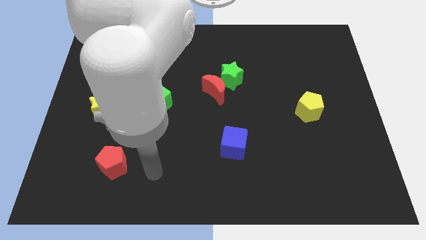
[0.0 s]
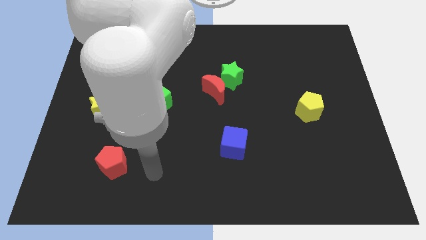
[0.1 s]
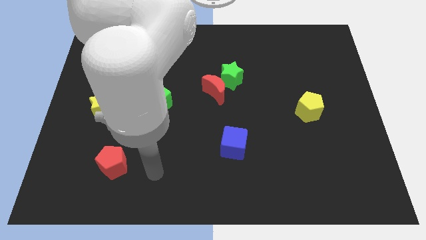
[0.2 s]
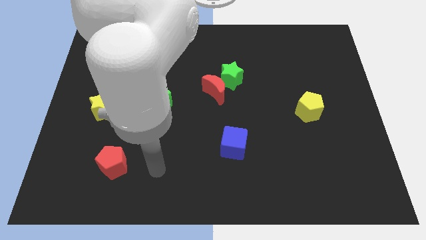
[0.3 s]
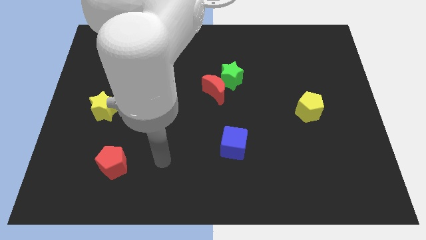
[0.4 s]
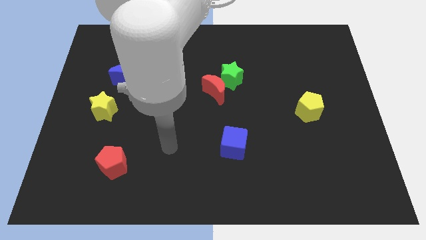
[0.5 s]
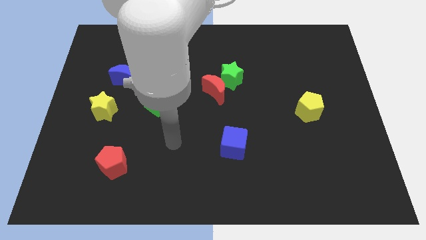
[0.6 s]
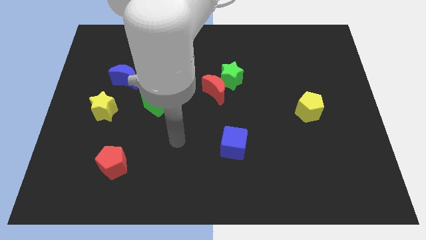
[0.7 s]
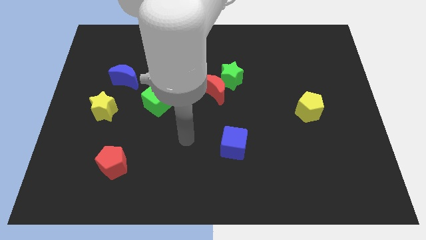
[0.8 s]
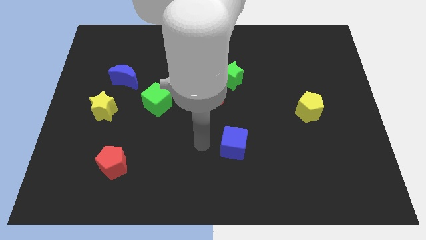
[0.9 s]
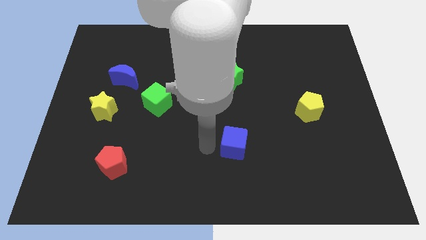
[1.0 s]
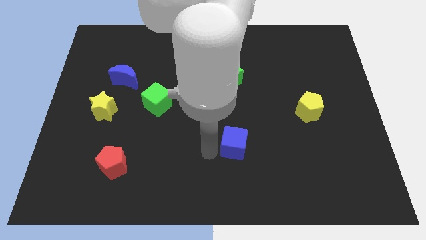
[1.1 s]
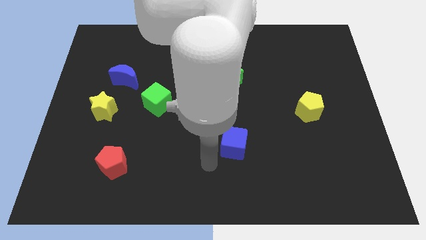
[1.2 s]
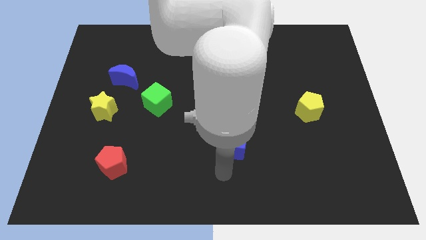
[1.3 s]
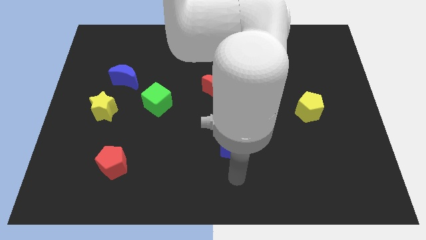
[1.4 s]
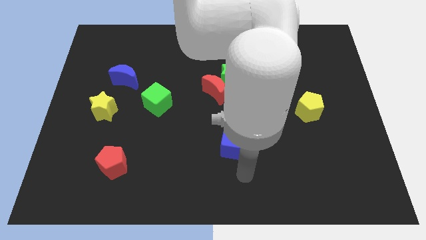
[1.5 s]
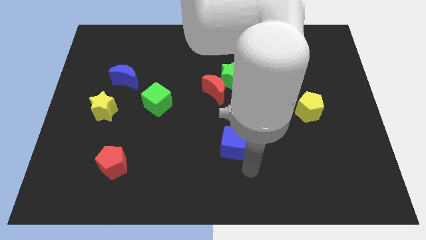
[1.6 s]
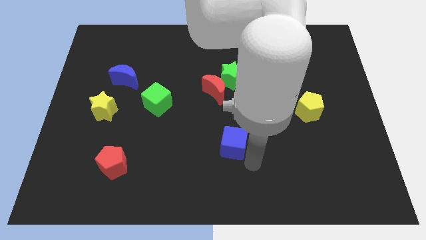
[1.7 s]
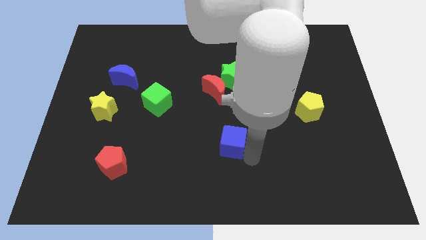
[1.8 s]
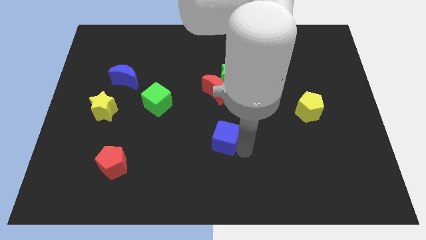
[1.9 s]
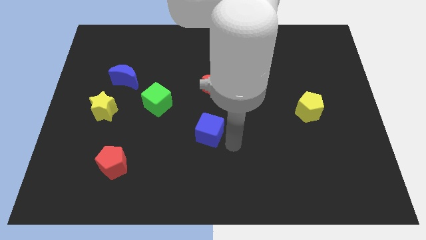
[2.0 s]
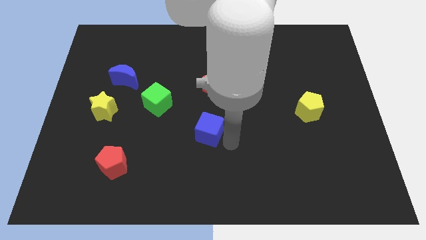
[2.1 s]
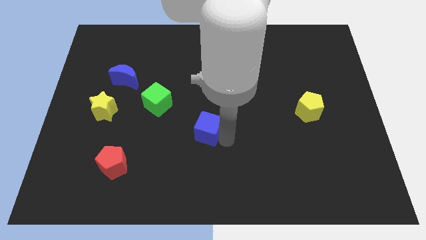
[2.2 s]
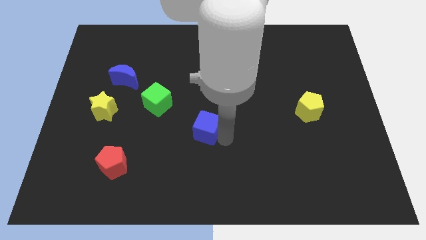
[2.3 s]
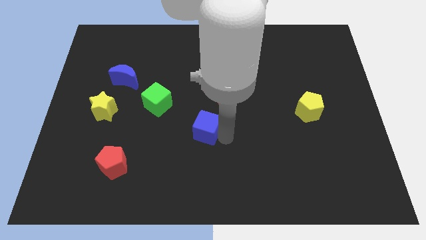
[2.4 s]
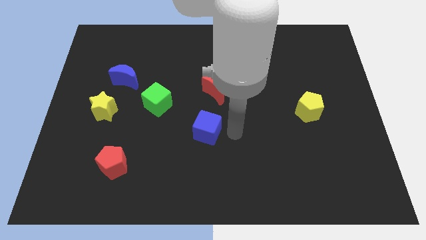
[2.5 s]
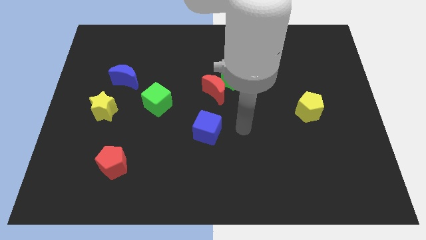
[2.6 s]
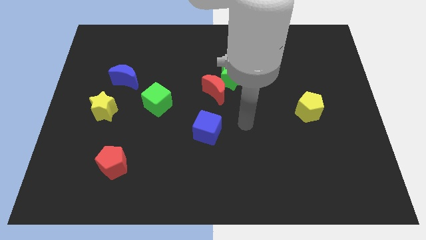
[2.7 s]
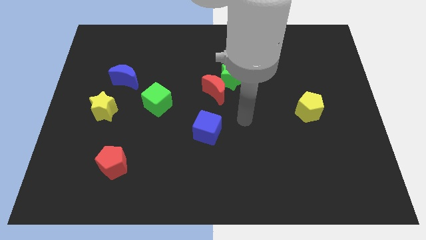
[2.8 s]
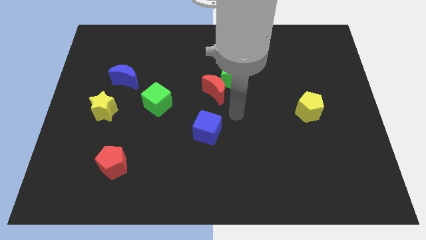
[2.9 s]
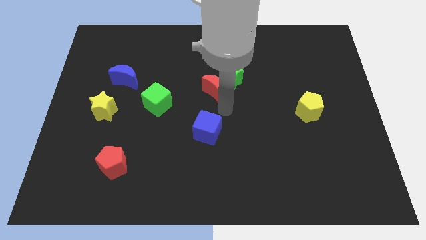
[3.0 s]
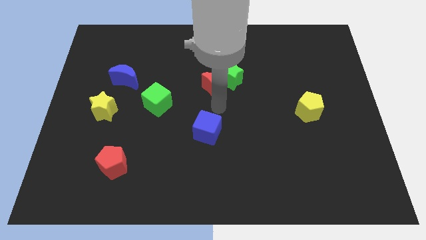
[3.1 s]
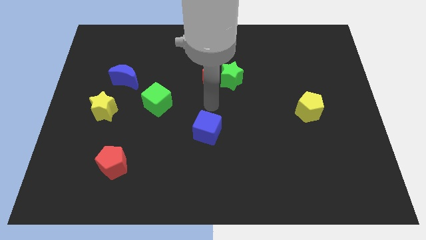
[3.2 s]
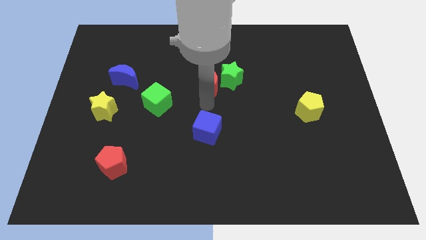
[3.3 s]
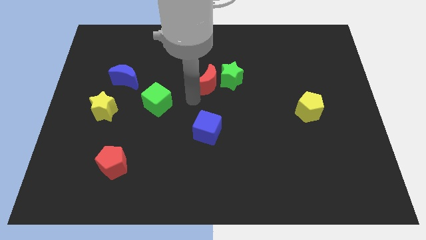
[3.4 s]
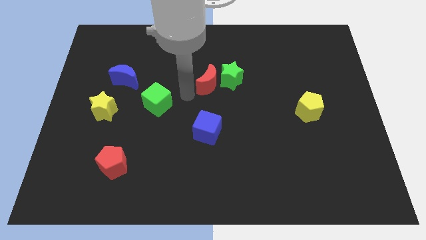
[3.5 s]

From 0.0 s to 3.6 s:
push the blue cube diagonally to the slightly left of the board

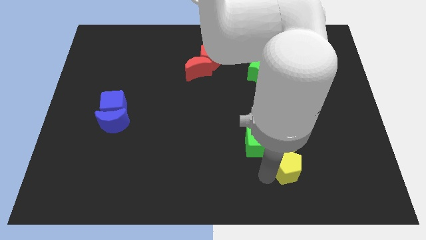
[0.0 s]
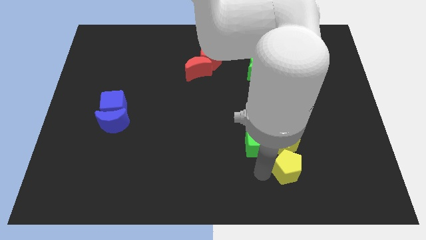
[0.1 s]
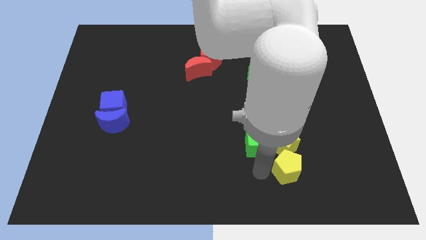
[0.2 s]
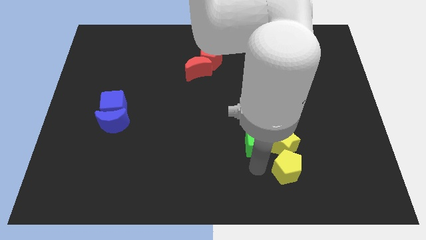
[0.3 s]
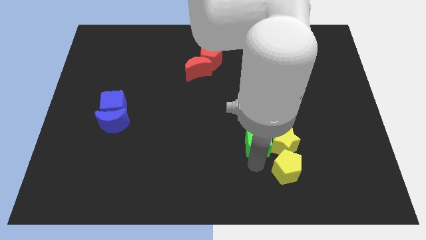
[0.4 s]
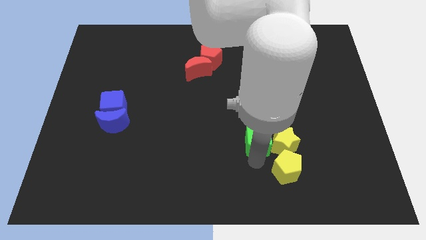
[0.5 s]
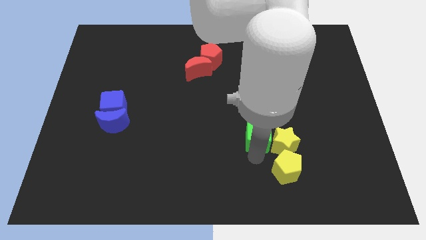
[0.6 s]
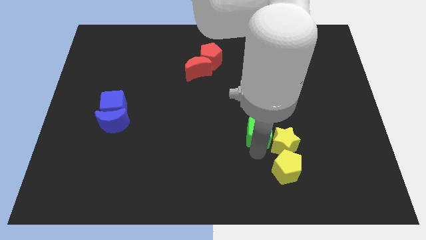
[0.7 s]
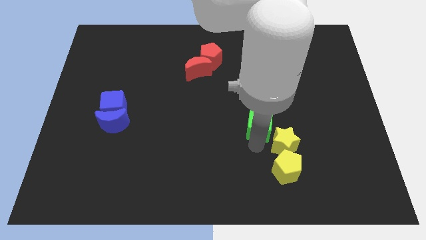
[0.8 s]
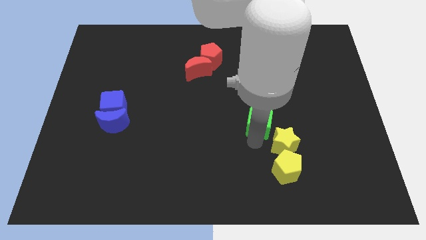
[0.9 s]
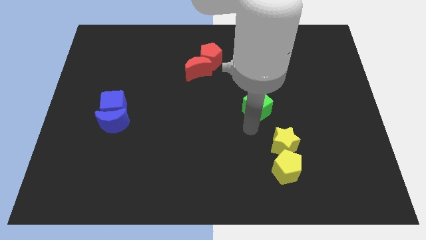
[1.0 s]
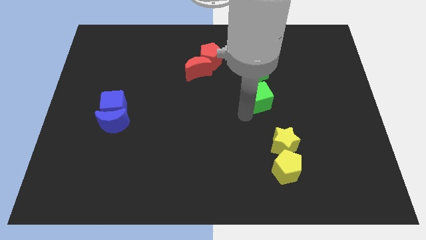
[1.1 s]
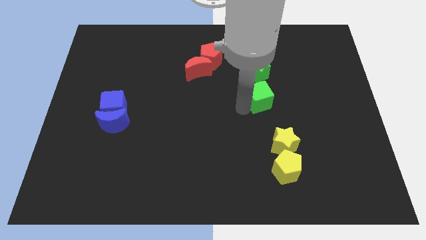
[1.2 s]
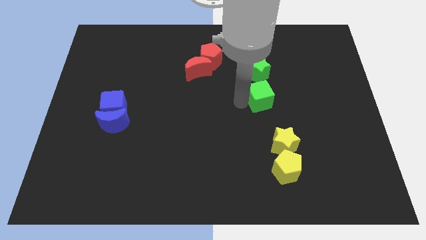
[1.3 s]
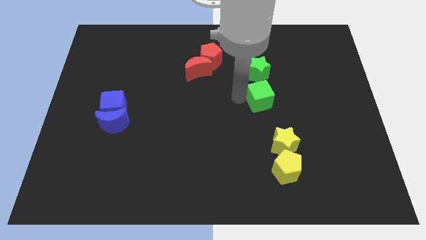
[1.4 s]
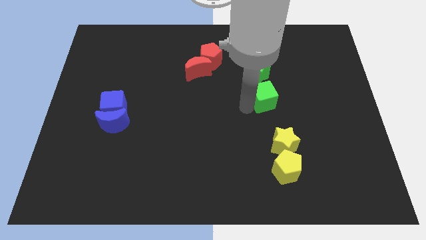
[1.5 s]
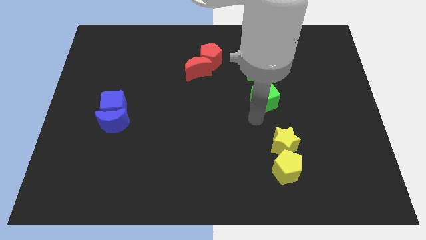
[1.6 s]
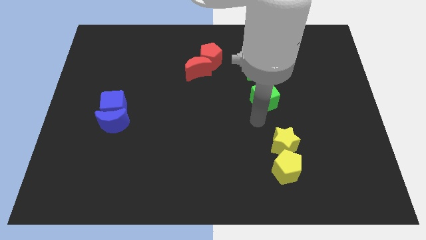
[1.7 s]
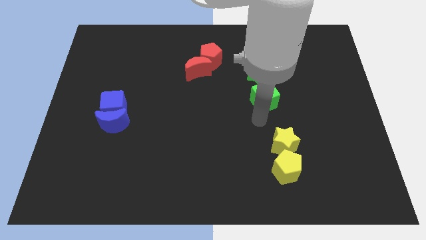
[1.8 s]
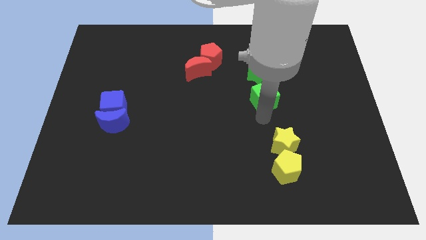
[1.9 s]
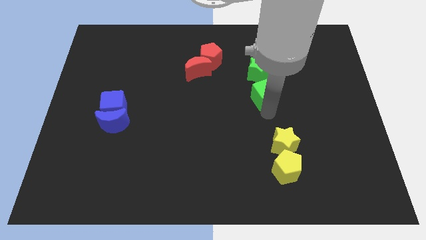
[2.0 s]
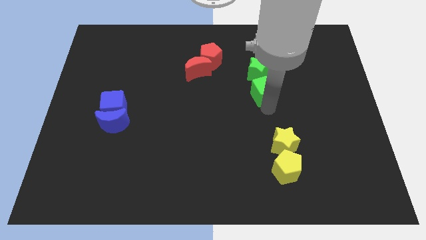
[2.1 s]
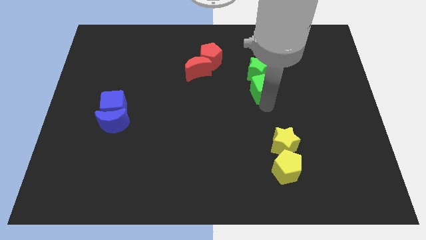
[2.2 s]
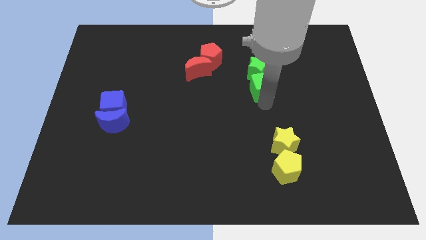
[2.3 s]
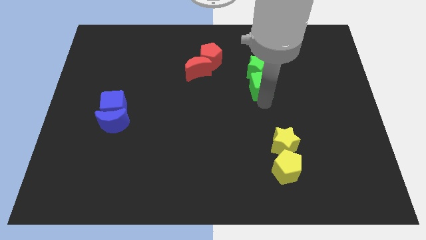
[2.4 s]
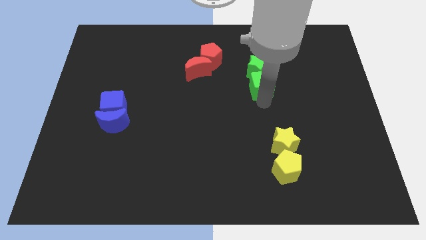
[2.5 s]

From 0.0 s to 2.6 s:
place the green cube below the green star

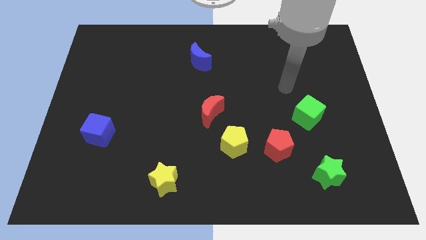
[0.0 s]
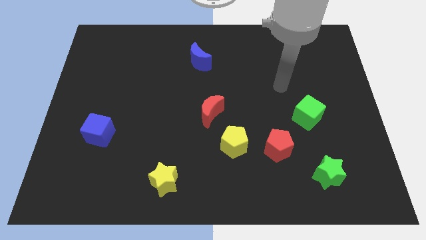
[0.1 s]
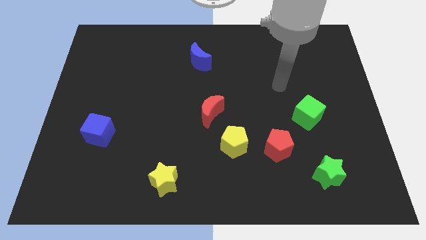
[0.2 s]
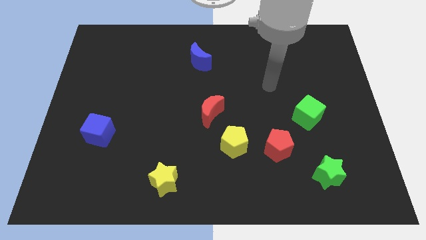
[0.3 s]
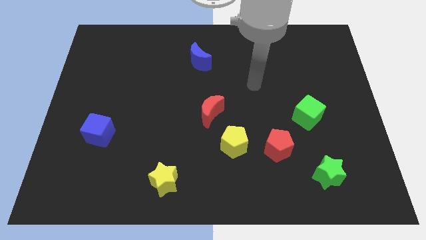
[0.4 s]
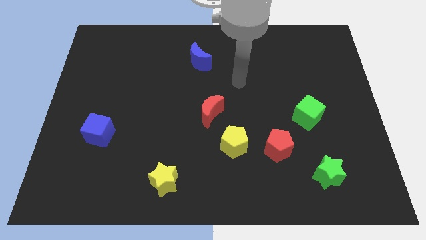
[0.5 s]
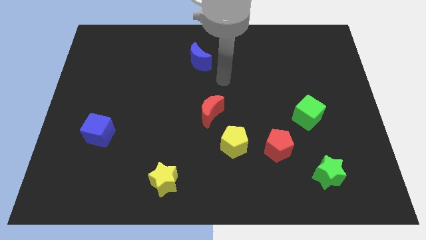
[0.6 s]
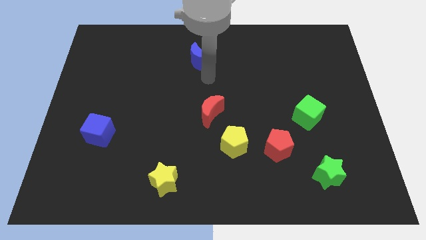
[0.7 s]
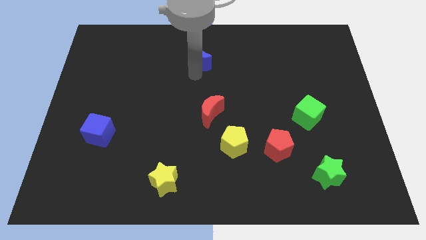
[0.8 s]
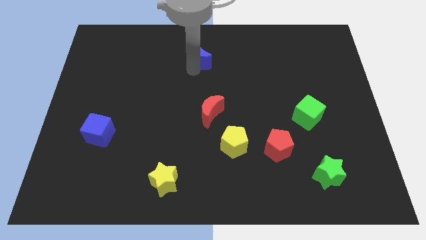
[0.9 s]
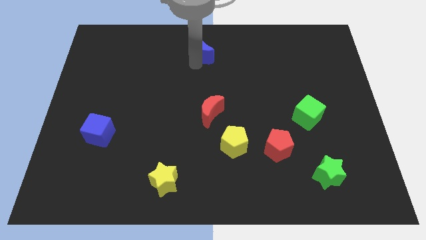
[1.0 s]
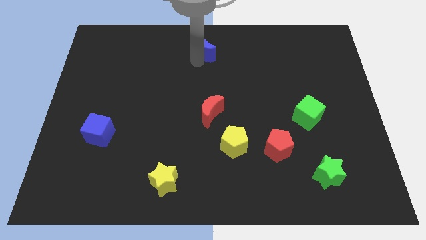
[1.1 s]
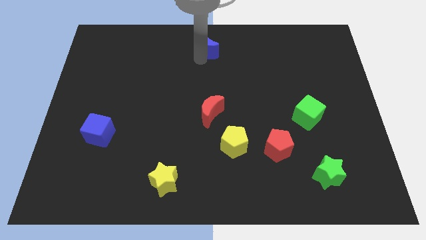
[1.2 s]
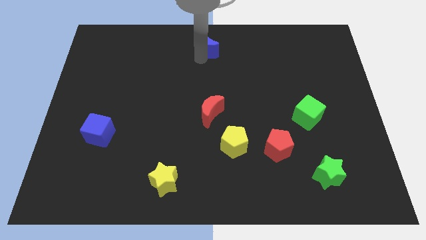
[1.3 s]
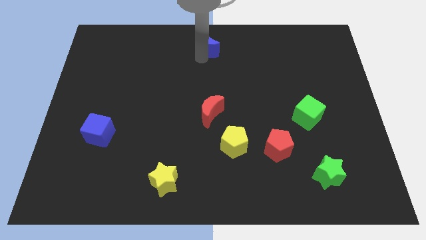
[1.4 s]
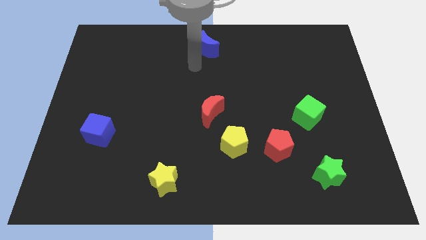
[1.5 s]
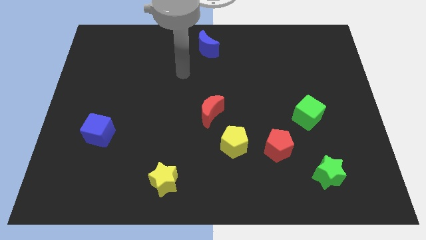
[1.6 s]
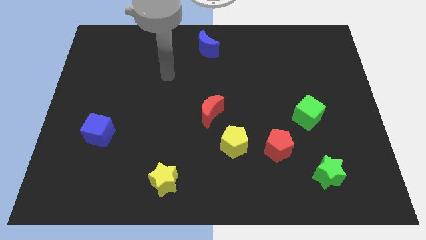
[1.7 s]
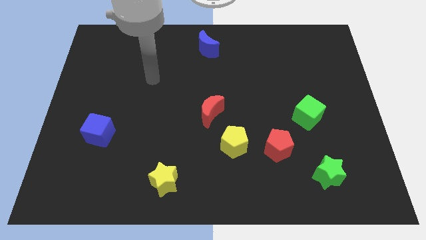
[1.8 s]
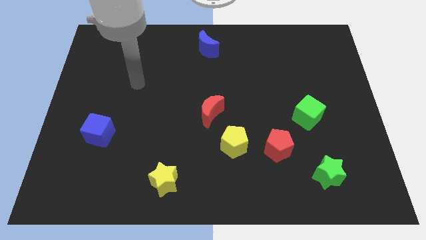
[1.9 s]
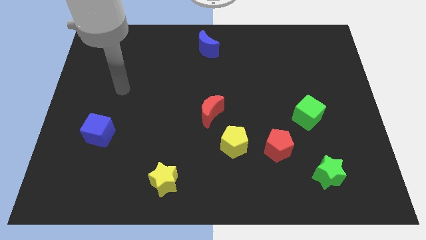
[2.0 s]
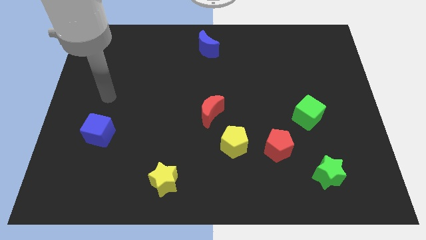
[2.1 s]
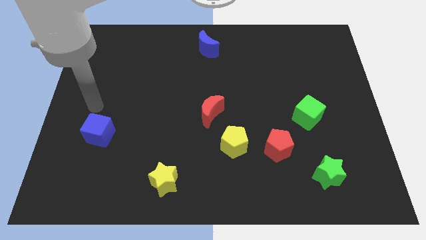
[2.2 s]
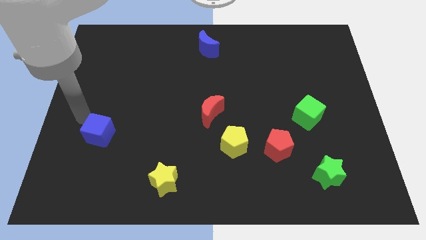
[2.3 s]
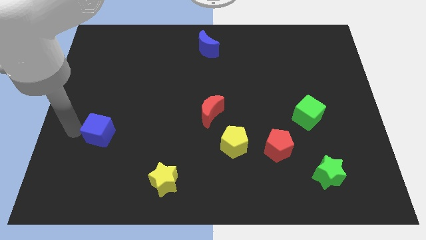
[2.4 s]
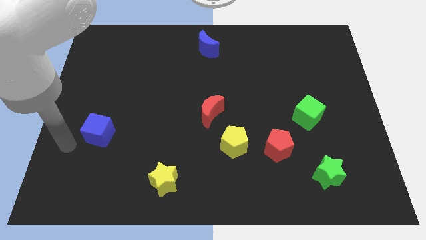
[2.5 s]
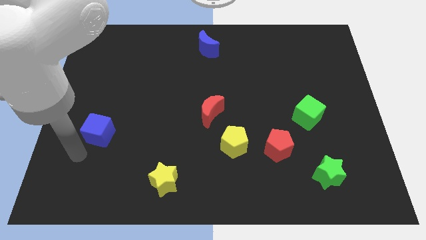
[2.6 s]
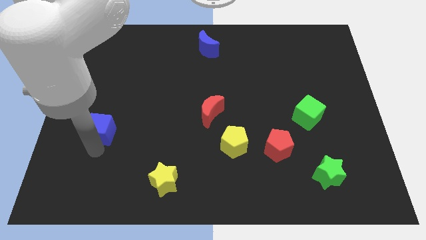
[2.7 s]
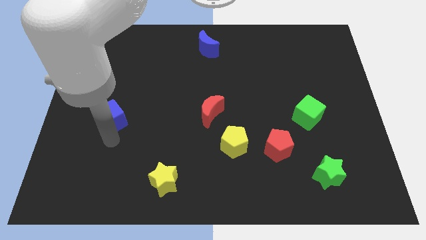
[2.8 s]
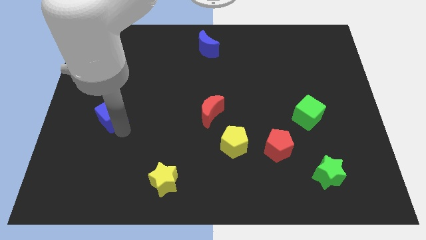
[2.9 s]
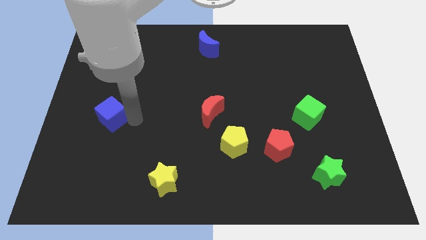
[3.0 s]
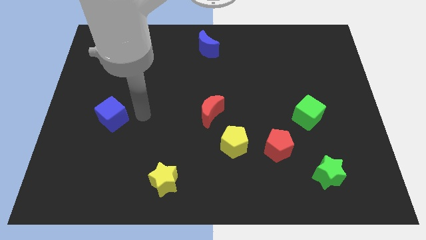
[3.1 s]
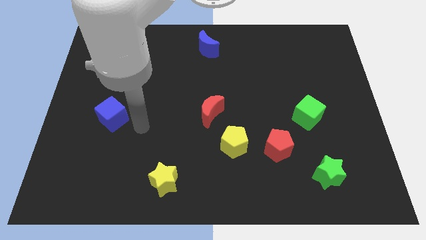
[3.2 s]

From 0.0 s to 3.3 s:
place the blue crescent to the top center
